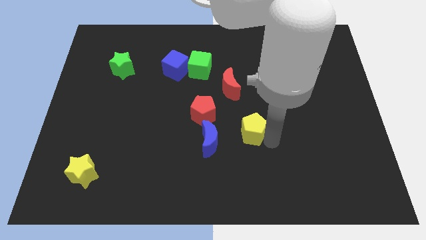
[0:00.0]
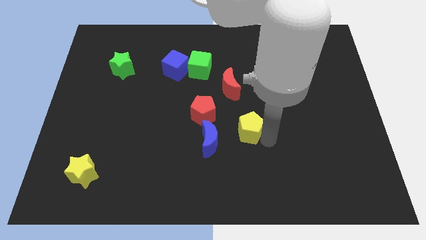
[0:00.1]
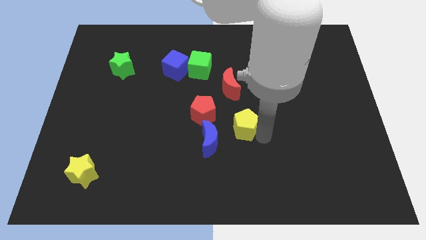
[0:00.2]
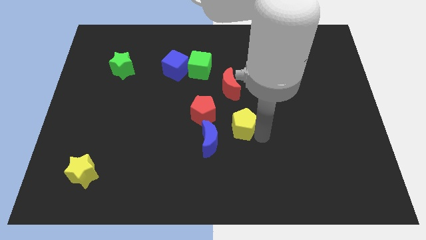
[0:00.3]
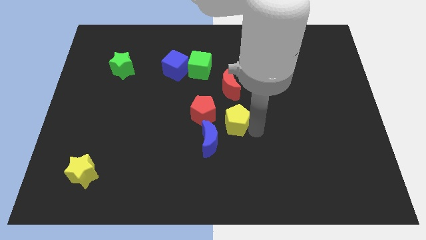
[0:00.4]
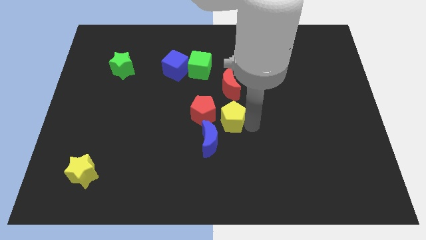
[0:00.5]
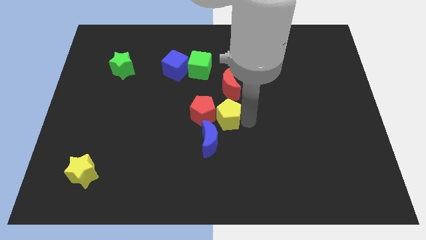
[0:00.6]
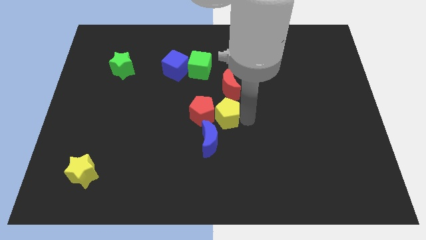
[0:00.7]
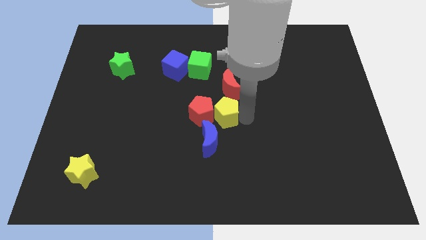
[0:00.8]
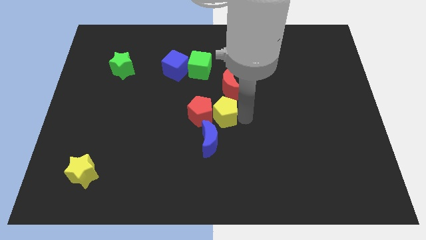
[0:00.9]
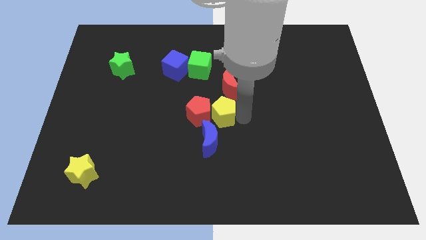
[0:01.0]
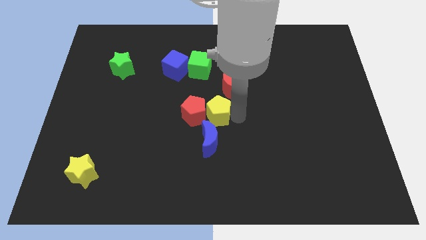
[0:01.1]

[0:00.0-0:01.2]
move yellow pentagon into the red pentagon

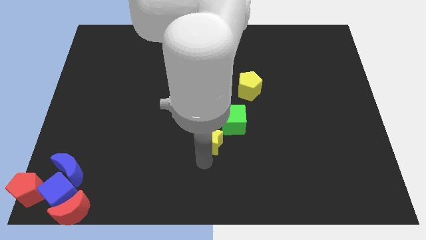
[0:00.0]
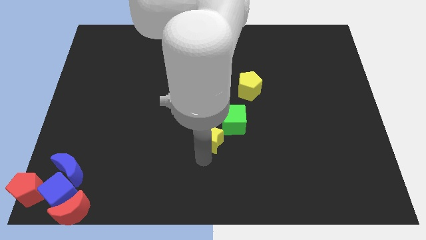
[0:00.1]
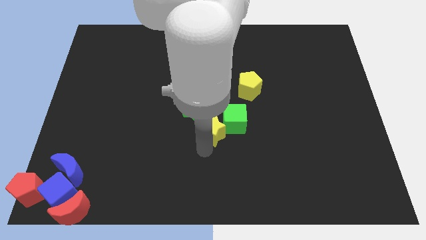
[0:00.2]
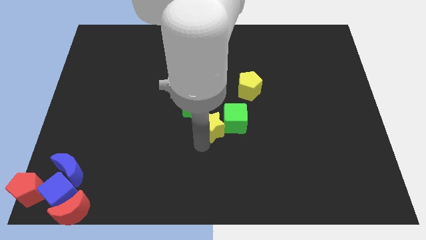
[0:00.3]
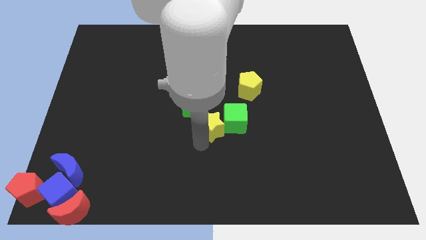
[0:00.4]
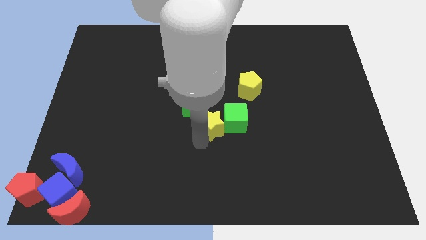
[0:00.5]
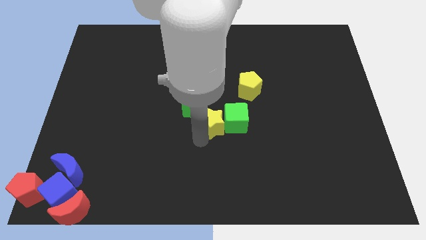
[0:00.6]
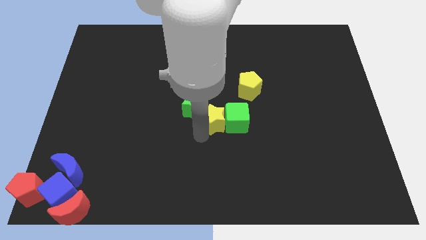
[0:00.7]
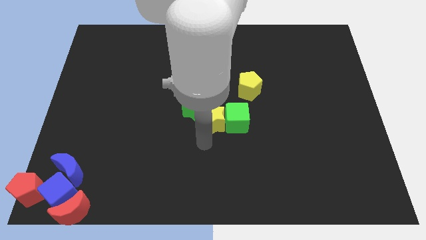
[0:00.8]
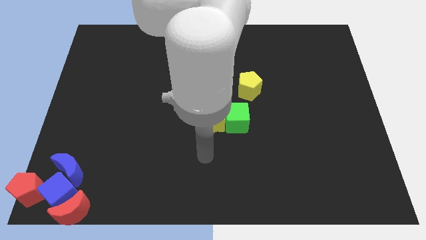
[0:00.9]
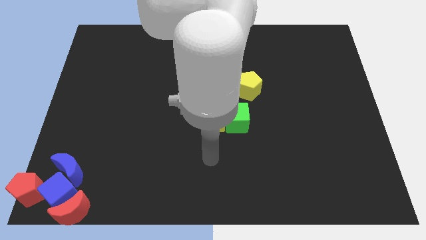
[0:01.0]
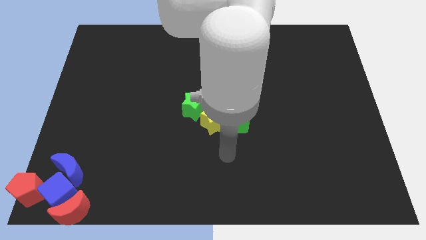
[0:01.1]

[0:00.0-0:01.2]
move the yellow star to the left of the green cube

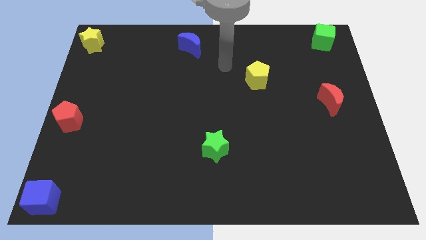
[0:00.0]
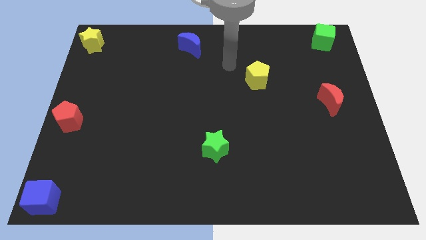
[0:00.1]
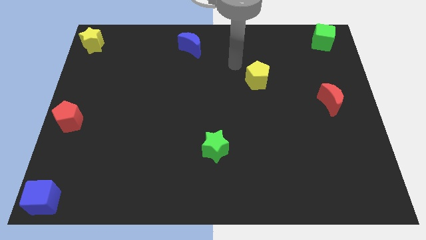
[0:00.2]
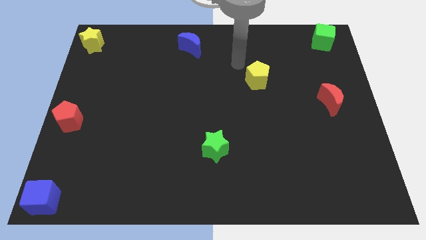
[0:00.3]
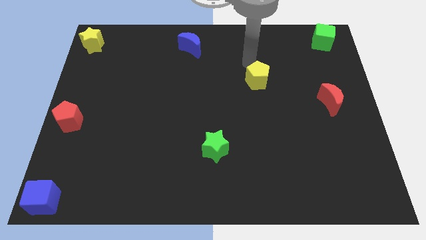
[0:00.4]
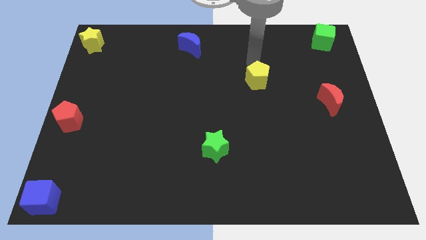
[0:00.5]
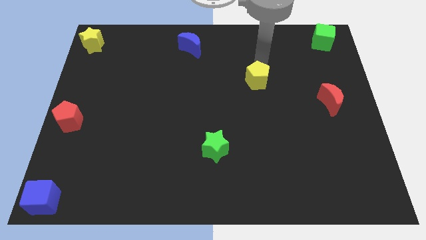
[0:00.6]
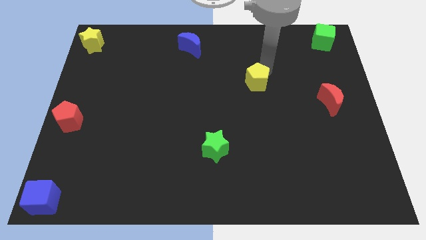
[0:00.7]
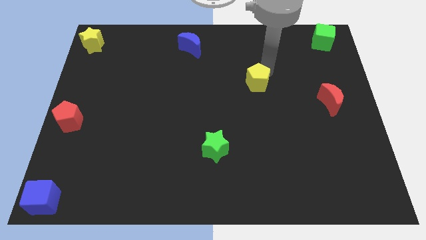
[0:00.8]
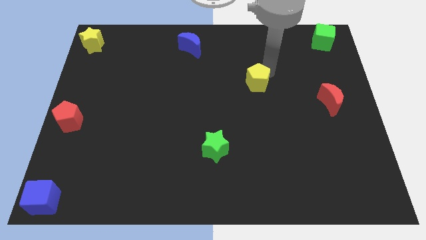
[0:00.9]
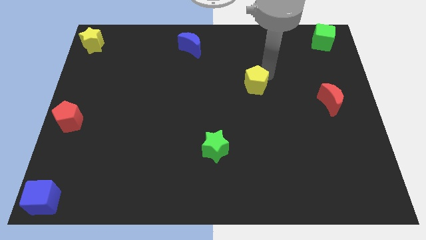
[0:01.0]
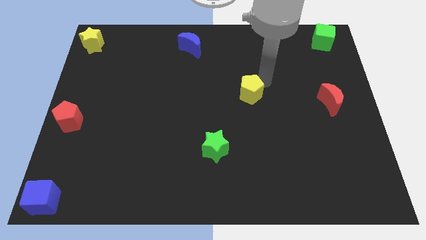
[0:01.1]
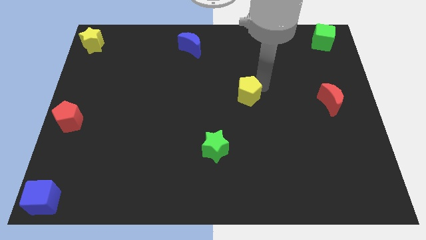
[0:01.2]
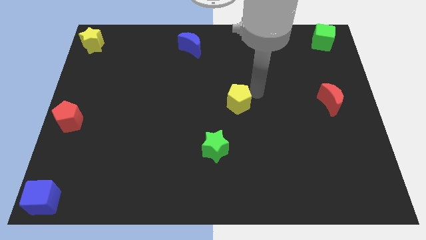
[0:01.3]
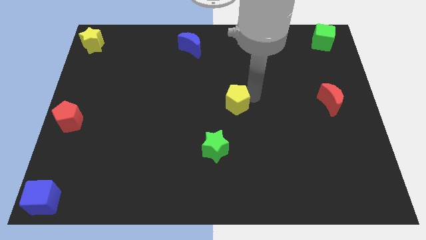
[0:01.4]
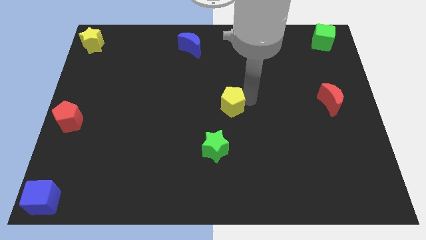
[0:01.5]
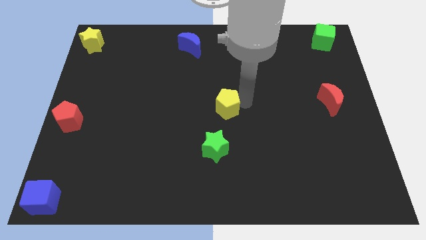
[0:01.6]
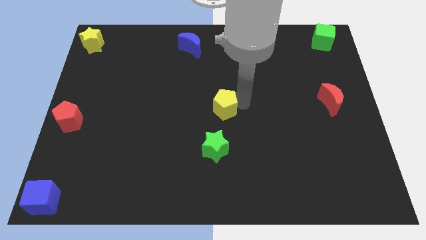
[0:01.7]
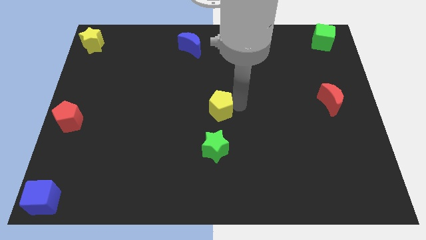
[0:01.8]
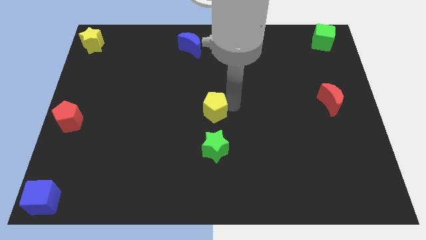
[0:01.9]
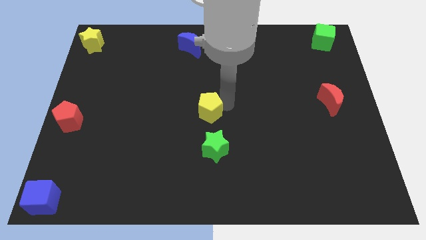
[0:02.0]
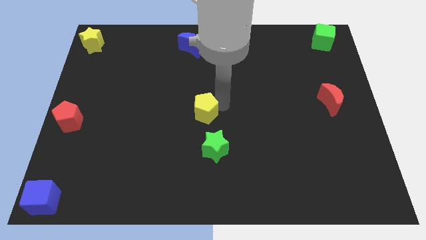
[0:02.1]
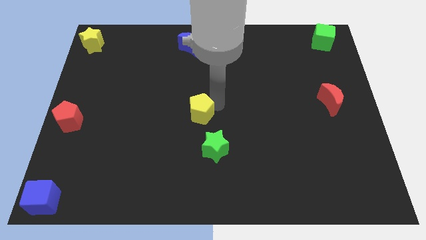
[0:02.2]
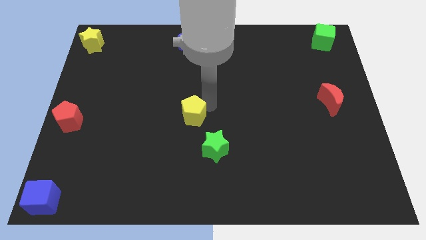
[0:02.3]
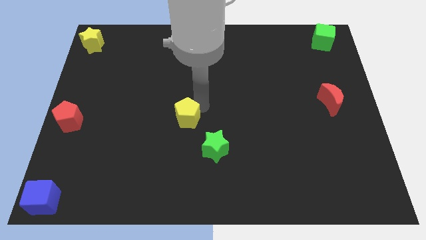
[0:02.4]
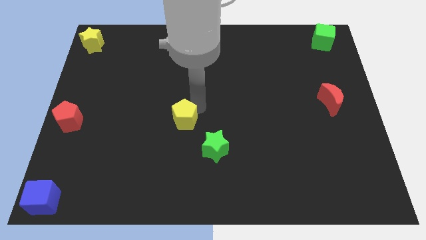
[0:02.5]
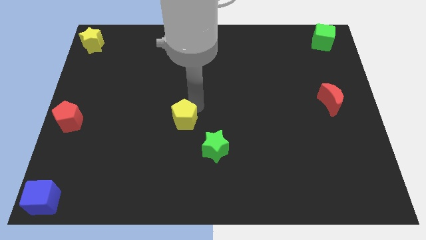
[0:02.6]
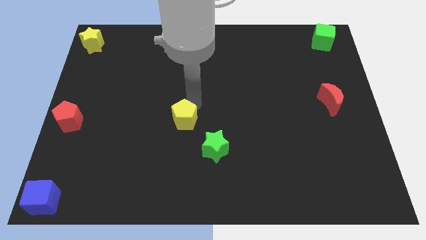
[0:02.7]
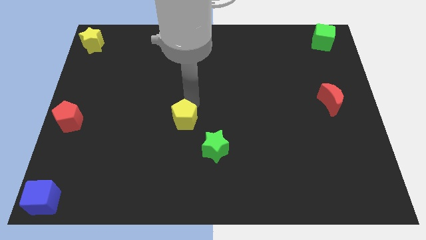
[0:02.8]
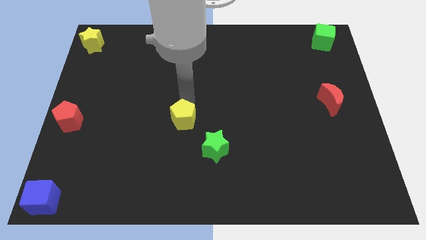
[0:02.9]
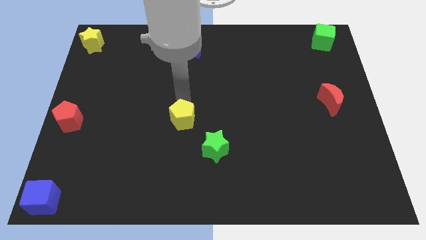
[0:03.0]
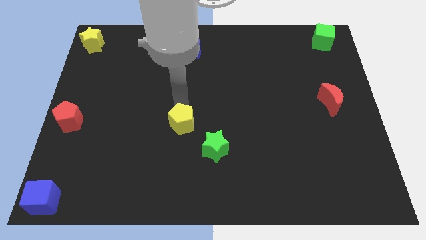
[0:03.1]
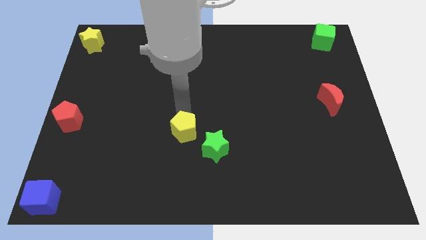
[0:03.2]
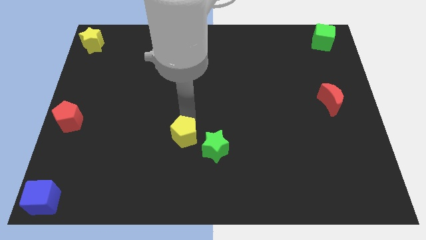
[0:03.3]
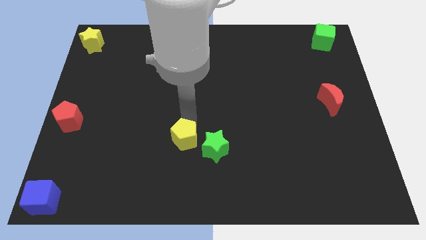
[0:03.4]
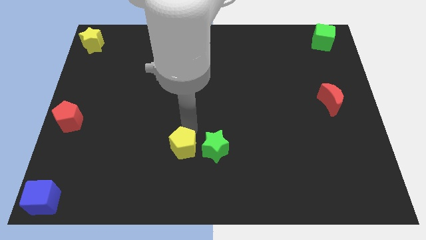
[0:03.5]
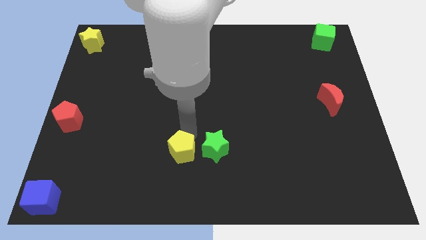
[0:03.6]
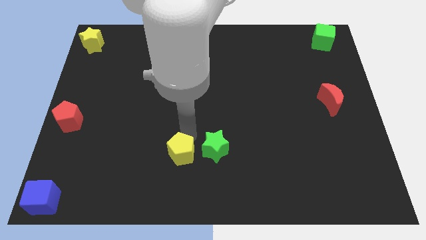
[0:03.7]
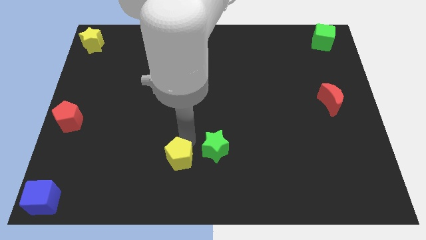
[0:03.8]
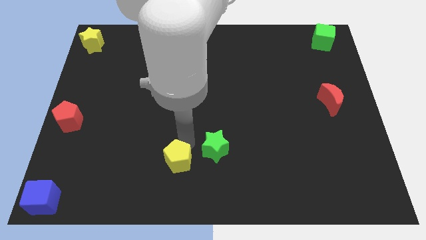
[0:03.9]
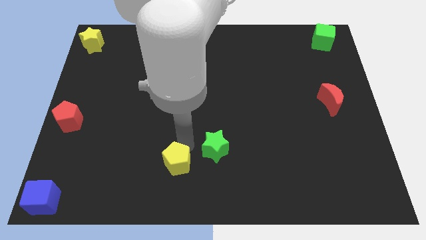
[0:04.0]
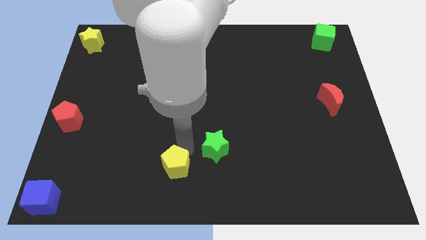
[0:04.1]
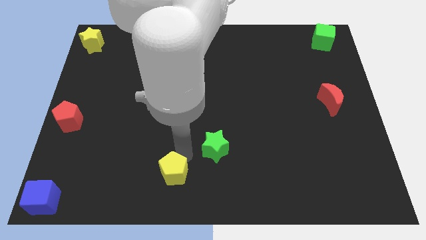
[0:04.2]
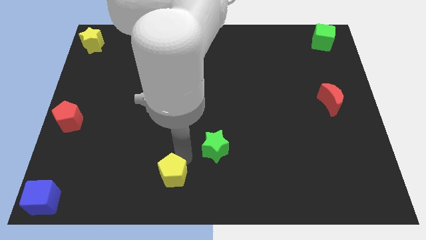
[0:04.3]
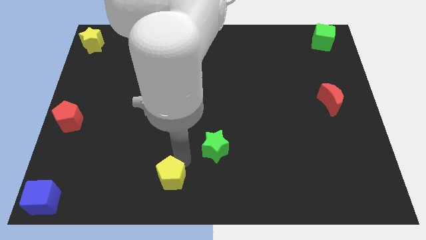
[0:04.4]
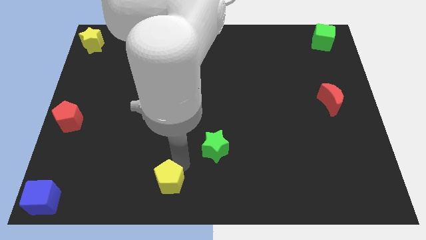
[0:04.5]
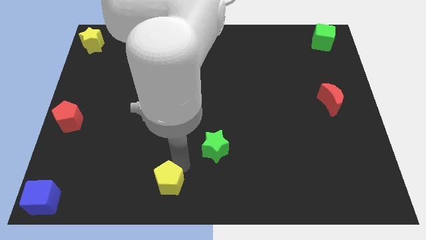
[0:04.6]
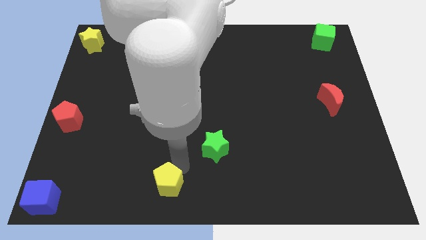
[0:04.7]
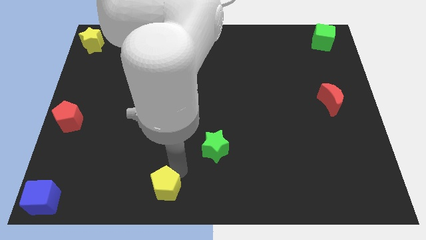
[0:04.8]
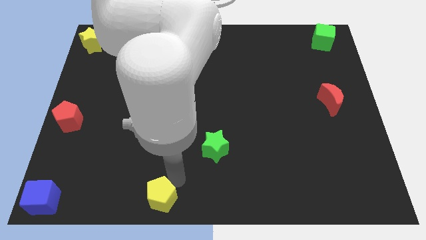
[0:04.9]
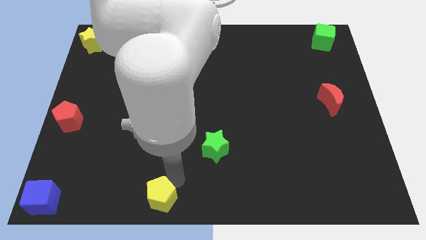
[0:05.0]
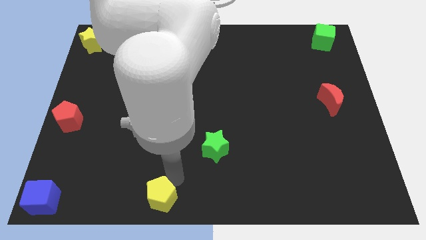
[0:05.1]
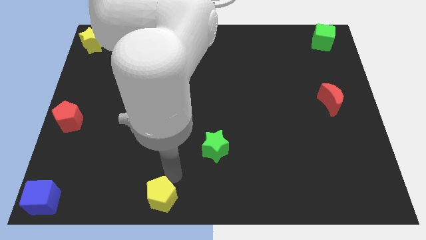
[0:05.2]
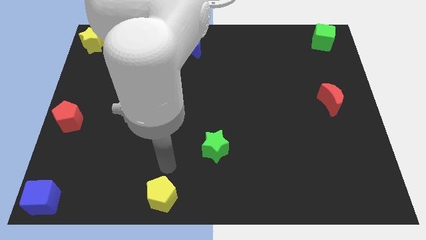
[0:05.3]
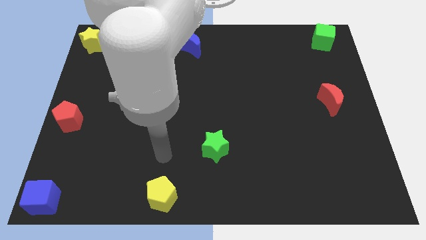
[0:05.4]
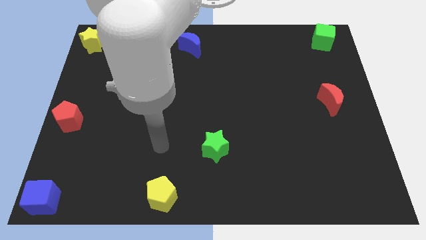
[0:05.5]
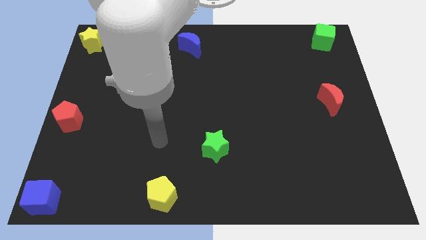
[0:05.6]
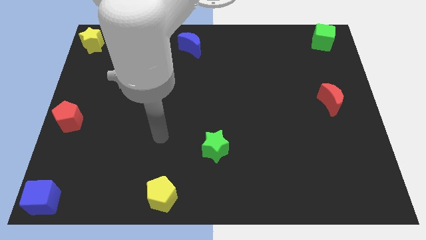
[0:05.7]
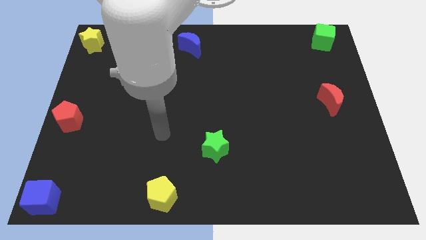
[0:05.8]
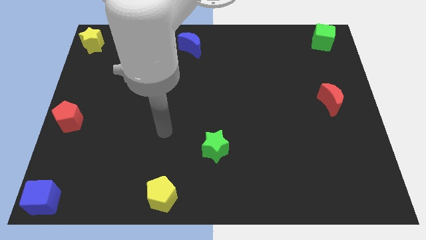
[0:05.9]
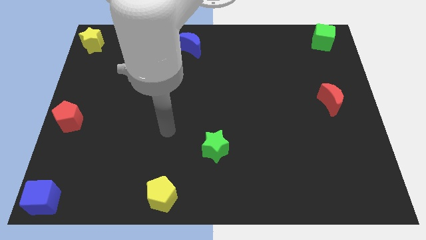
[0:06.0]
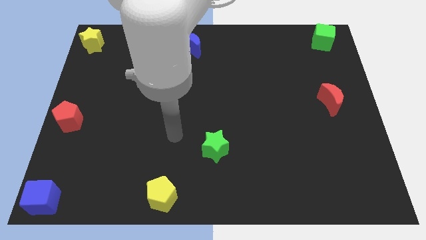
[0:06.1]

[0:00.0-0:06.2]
push the yellow pentagon to the bottom of the board

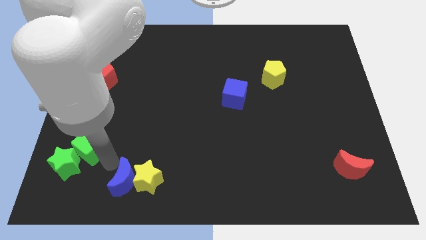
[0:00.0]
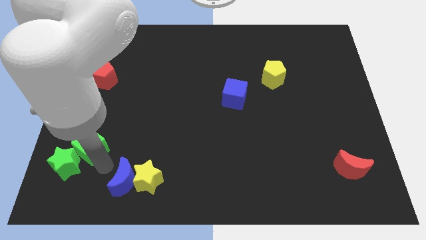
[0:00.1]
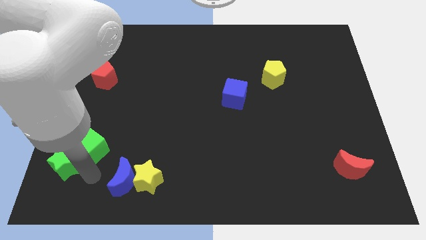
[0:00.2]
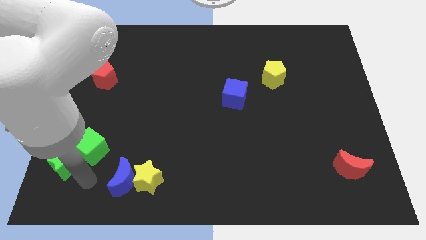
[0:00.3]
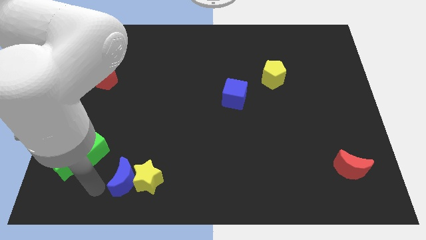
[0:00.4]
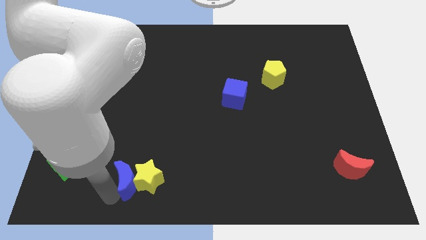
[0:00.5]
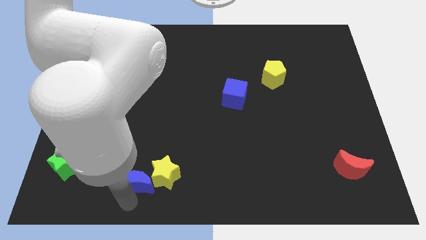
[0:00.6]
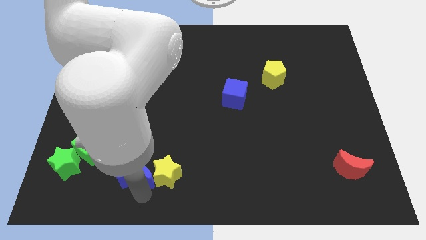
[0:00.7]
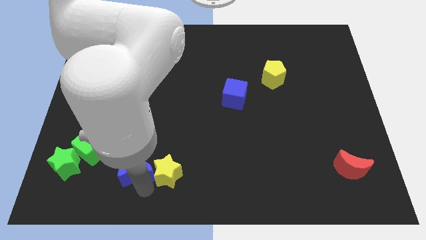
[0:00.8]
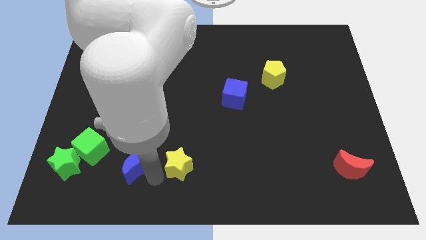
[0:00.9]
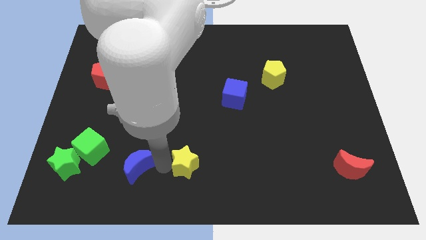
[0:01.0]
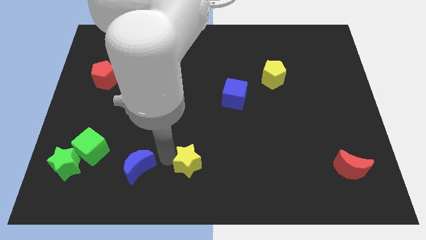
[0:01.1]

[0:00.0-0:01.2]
separate the yellow star and blue crescent
